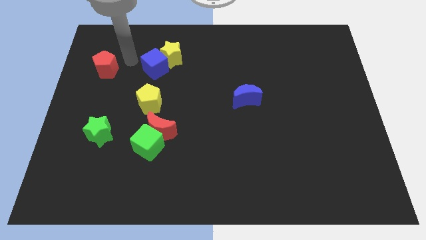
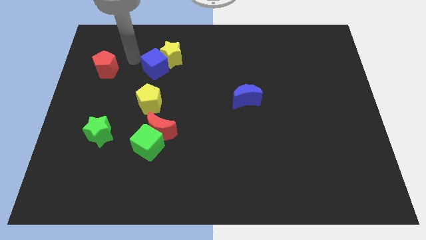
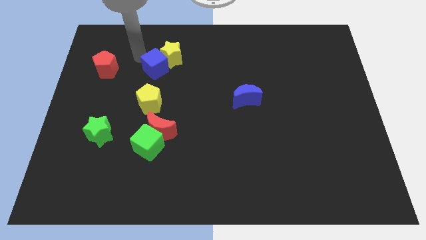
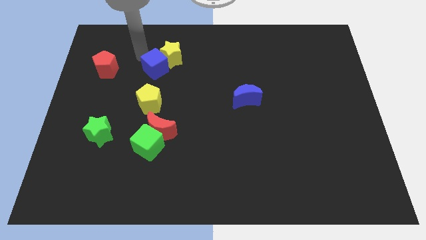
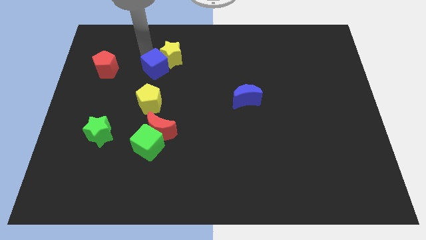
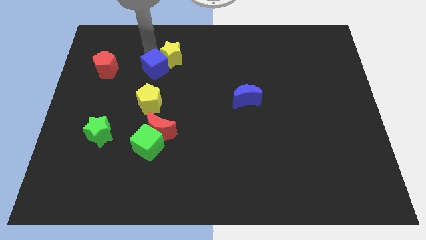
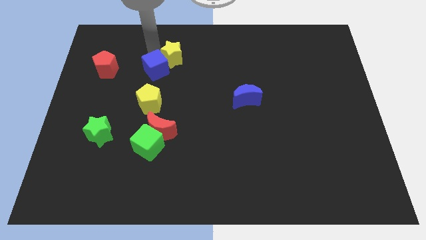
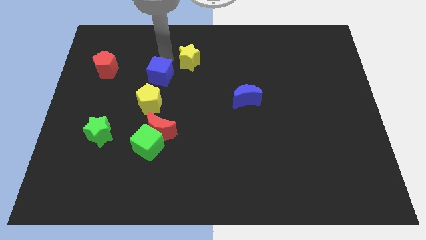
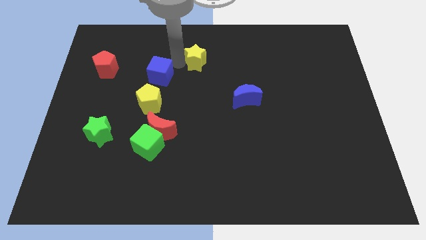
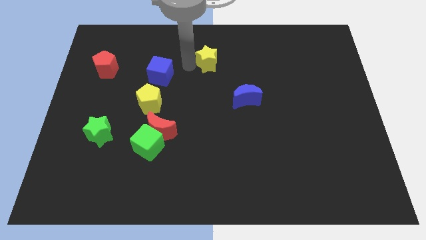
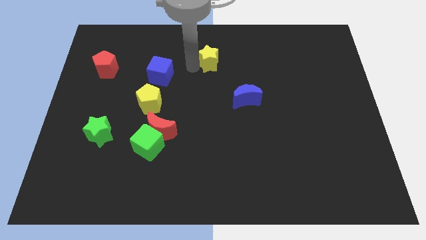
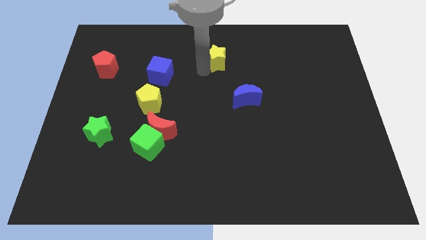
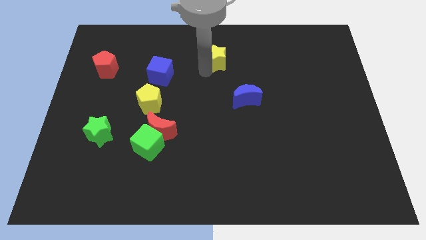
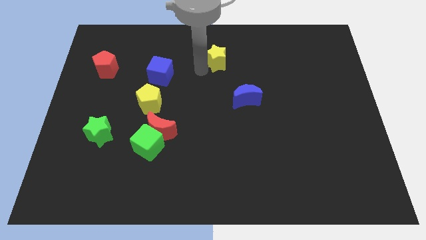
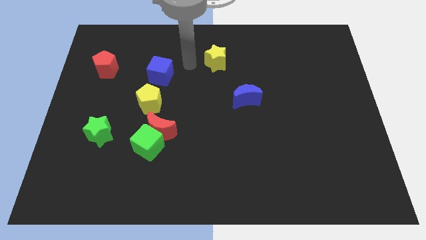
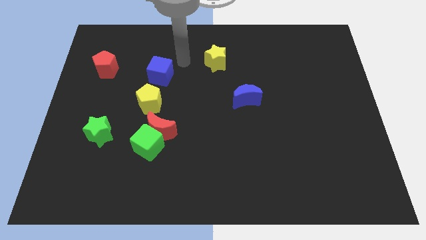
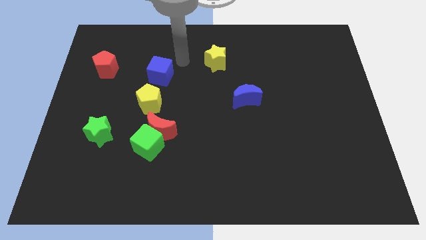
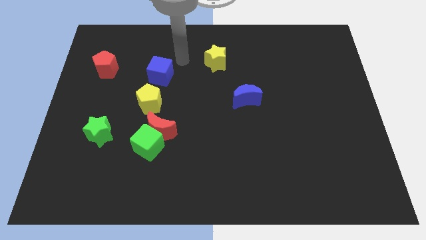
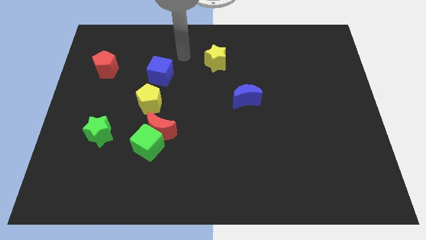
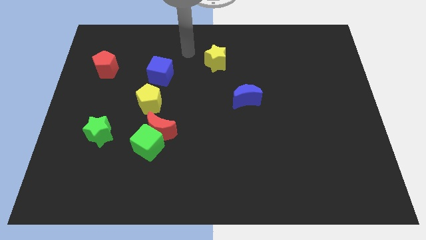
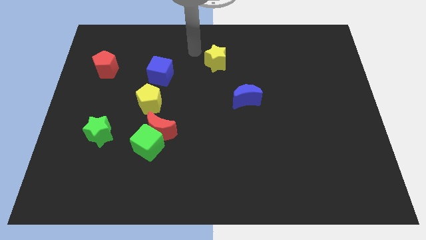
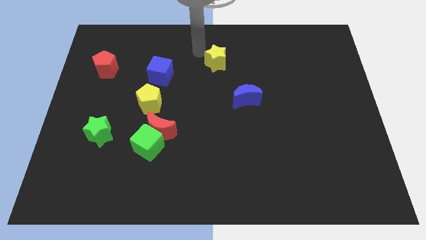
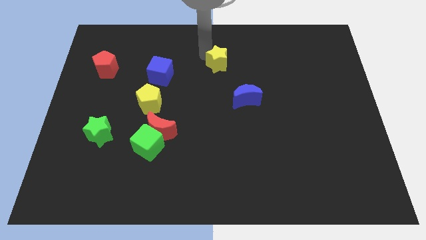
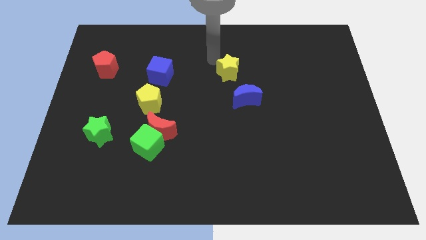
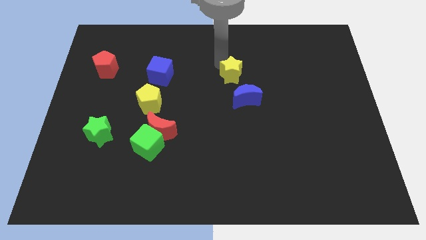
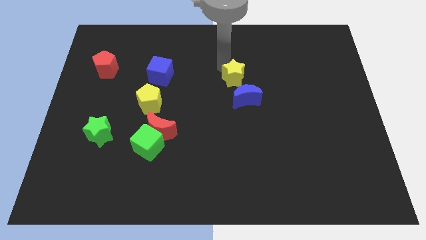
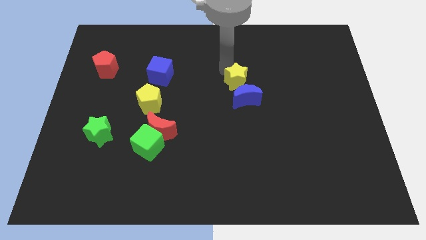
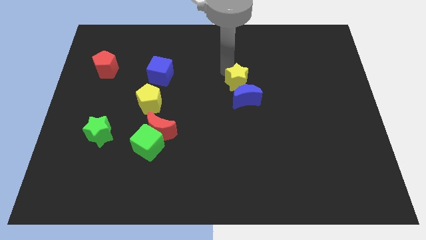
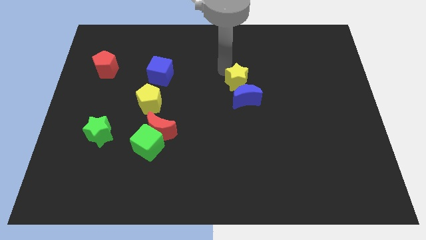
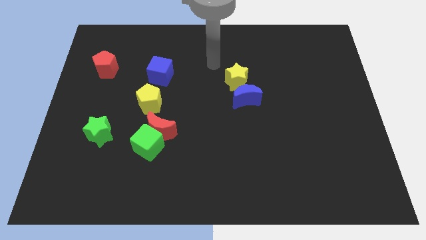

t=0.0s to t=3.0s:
place the yellow star at the top of blue moon

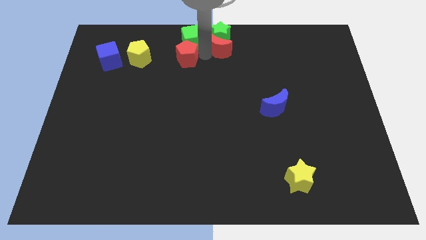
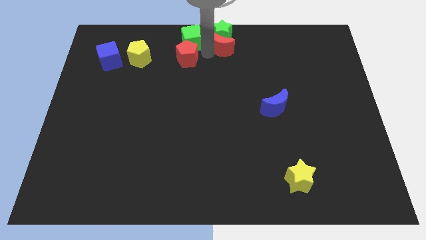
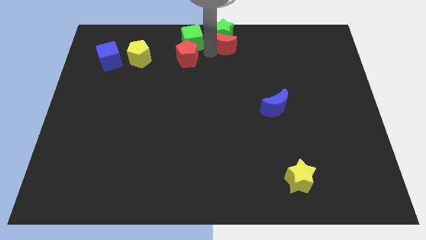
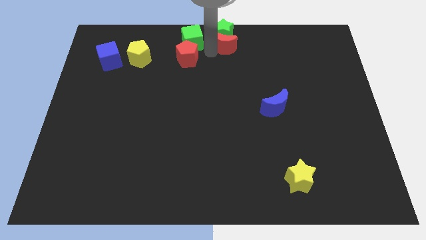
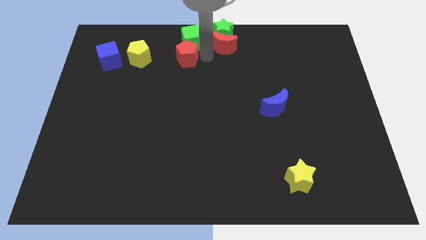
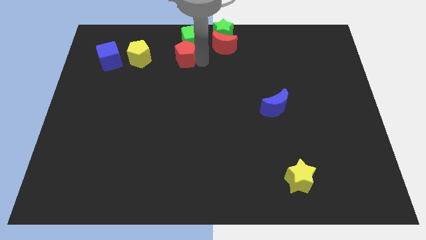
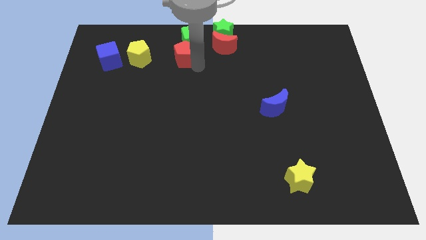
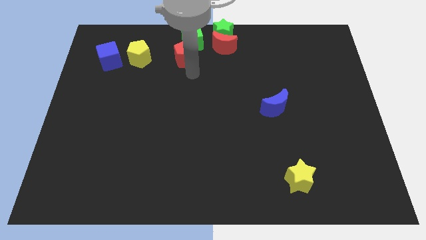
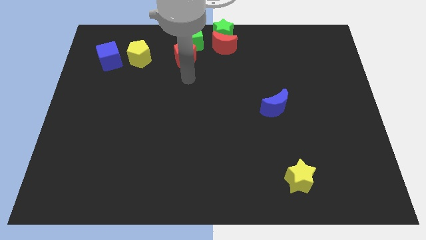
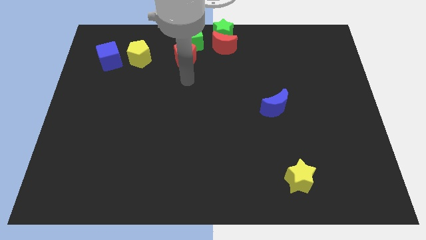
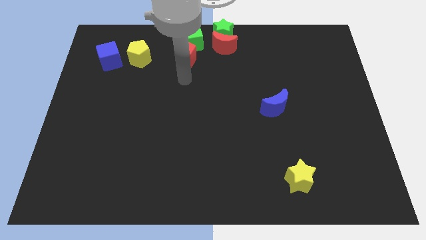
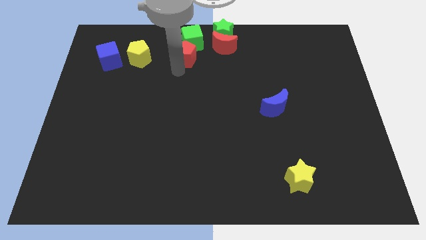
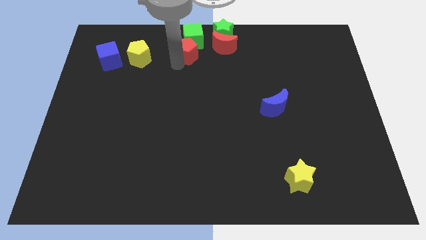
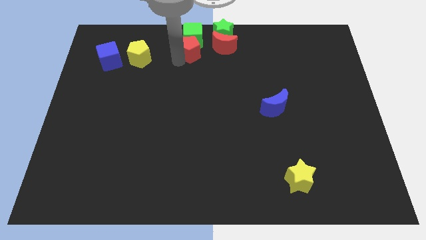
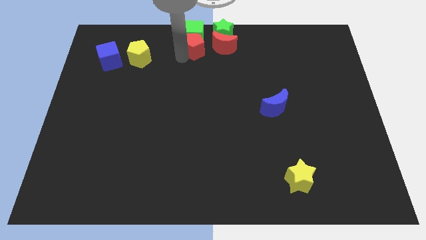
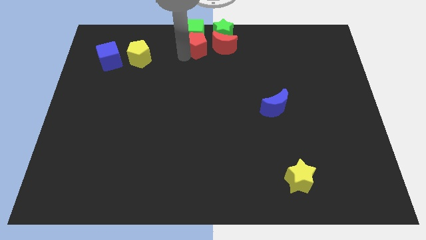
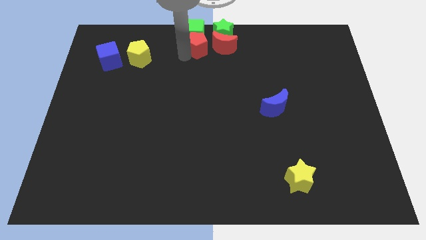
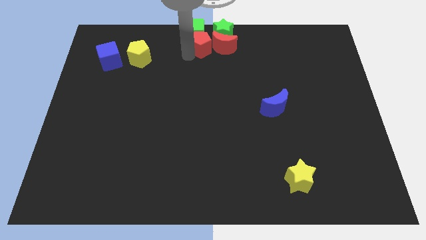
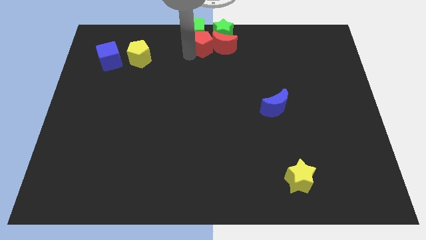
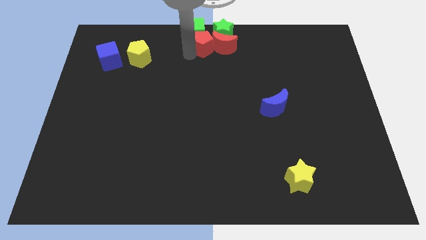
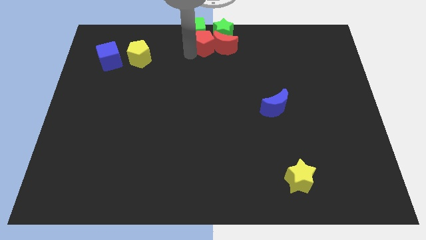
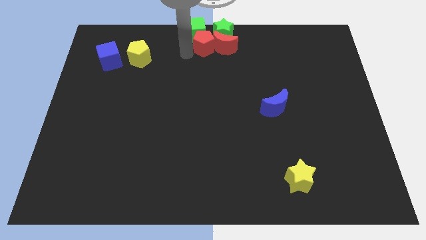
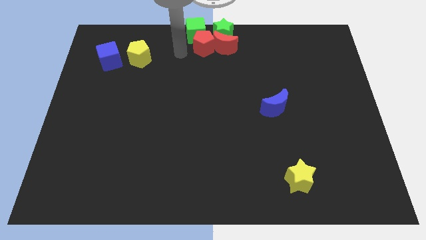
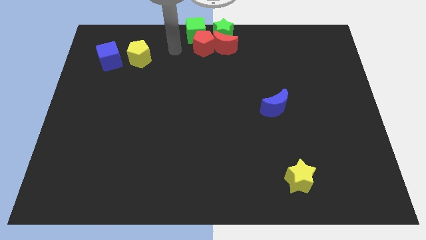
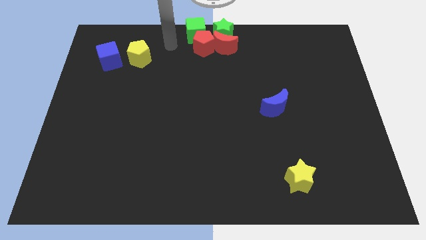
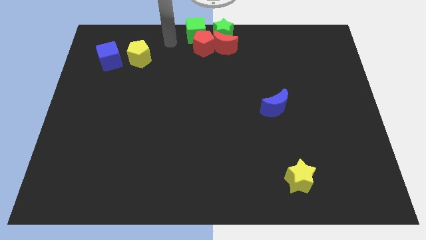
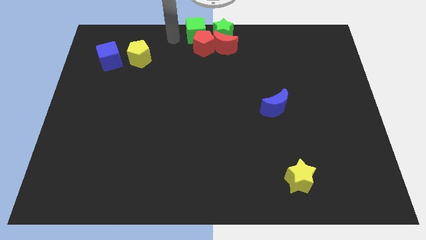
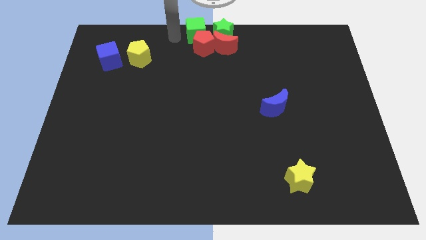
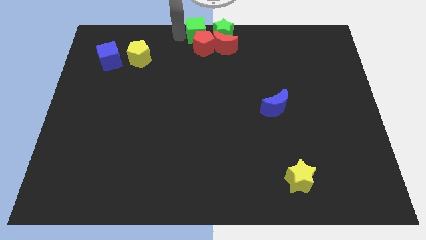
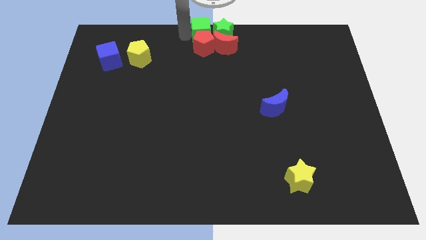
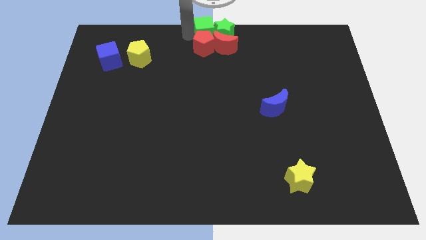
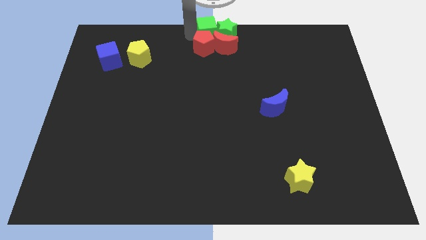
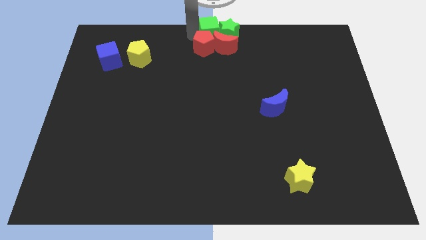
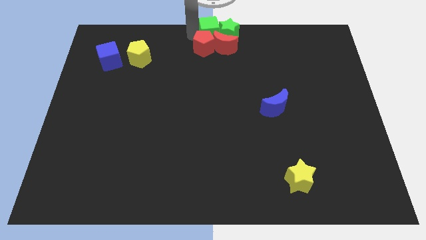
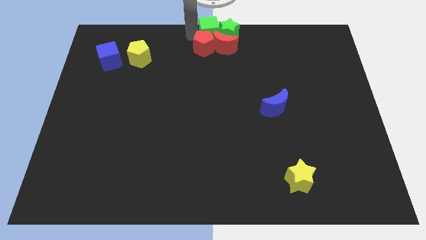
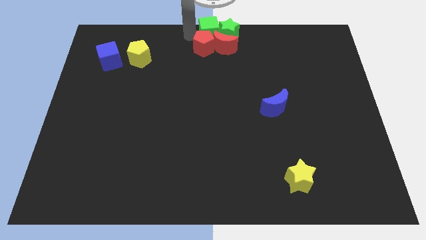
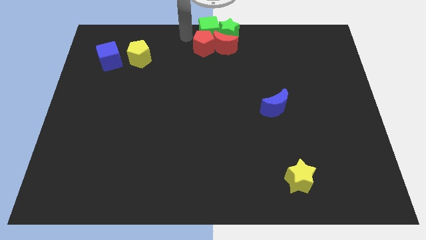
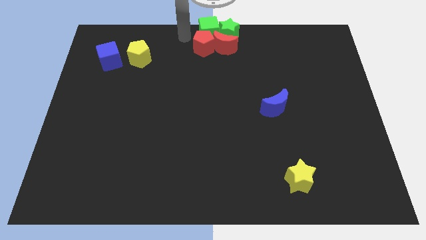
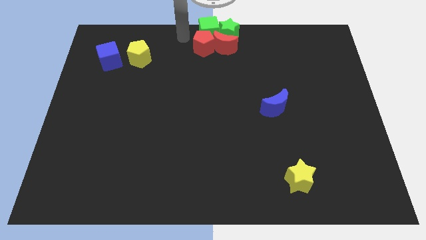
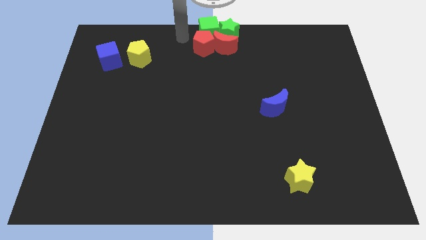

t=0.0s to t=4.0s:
place the red pentagon left to the red crescent

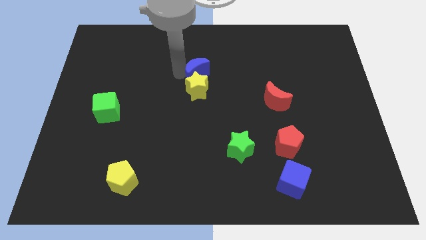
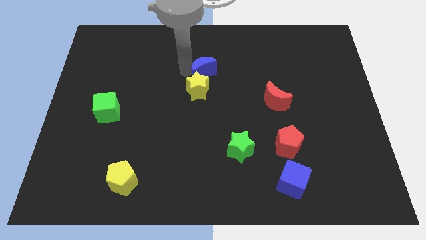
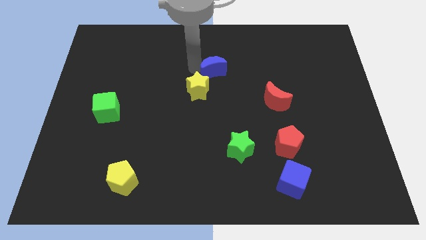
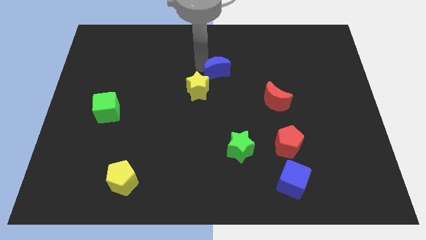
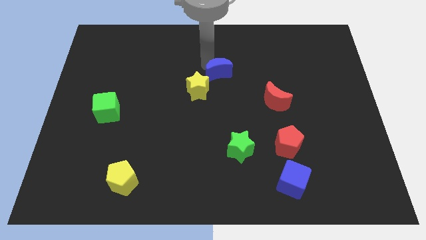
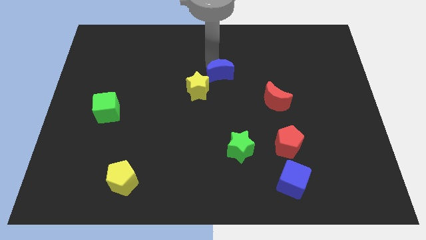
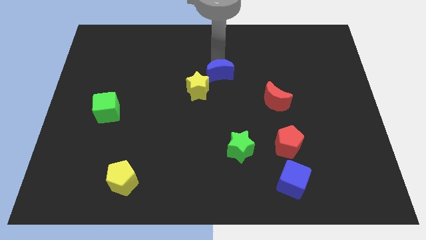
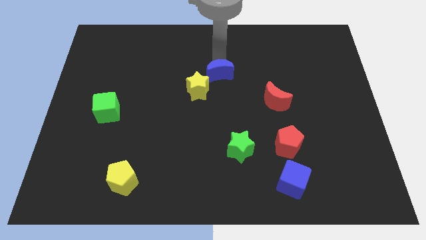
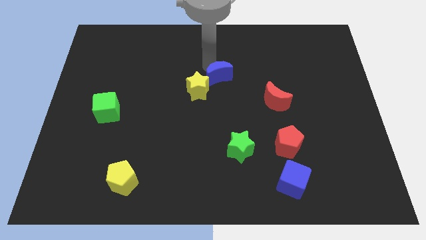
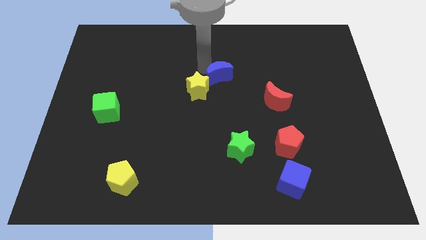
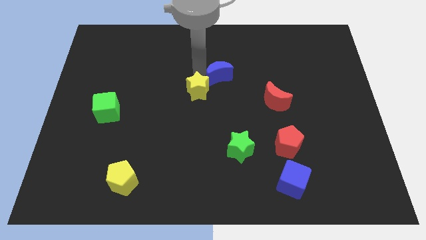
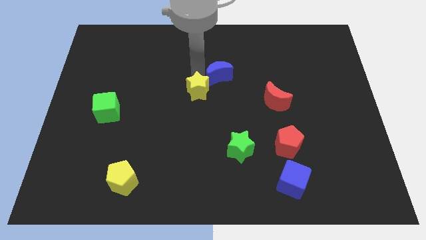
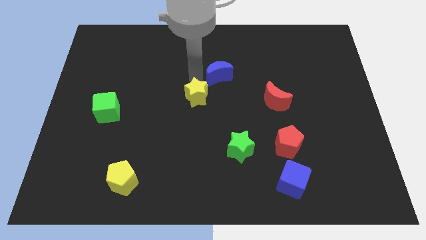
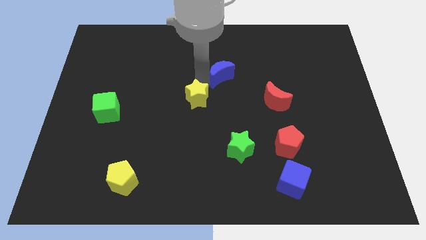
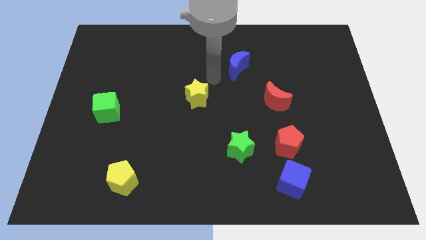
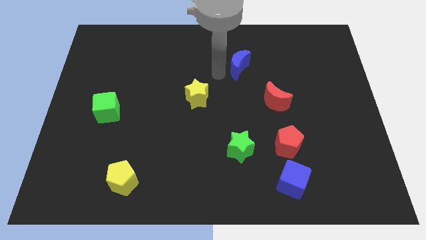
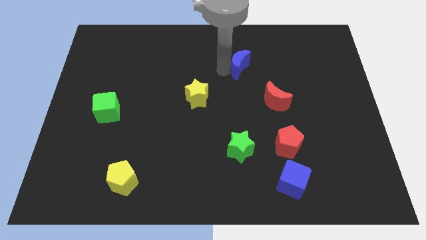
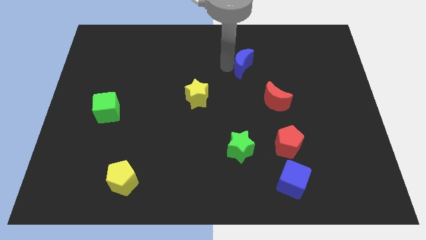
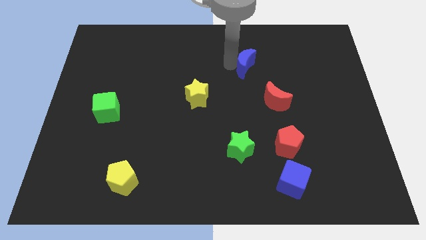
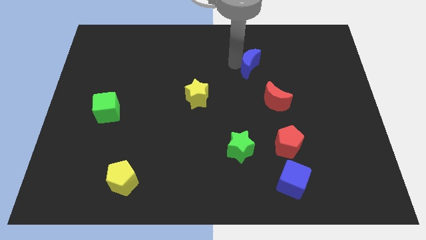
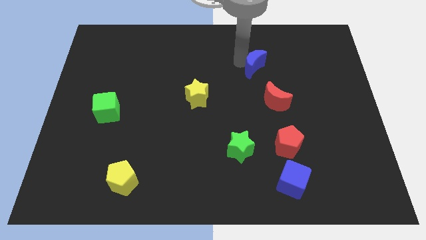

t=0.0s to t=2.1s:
push the blue moon diagonally to yellow star

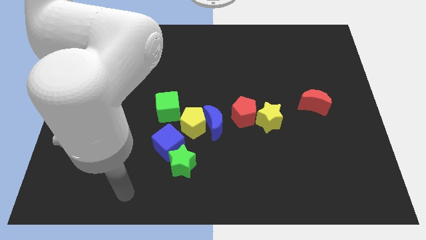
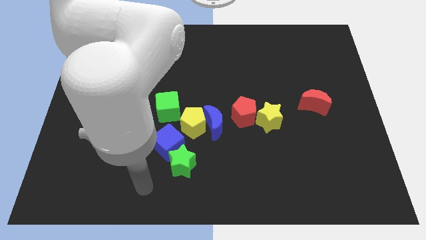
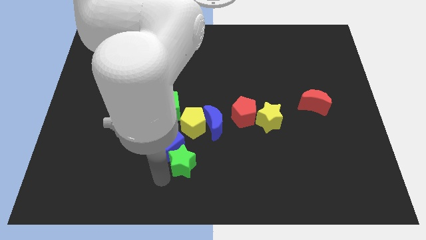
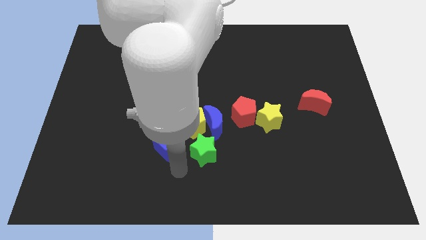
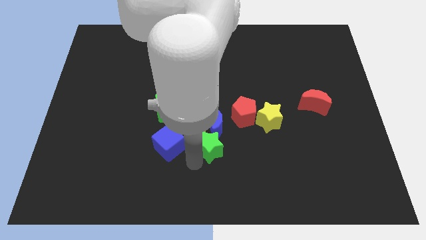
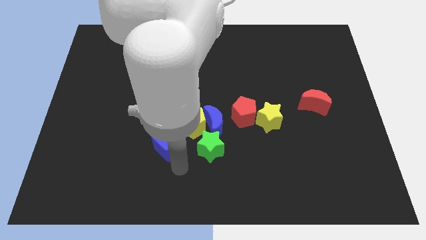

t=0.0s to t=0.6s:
place the green star below the yellow pentagon
